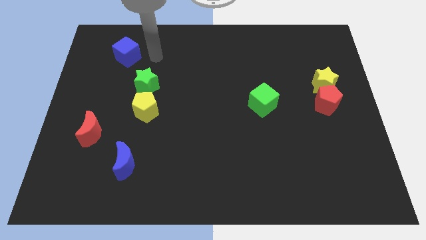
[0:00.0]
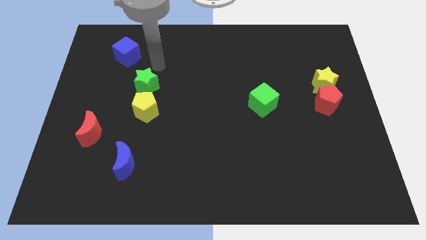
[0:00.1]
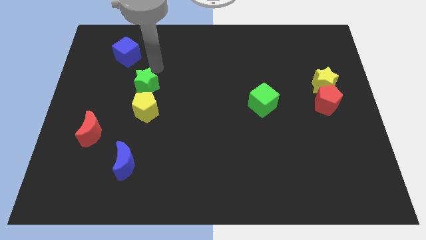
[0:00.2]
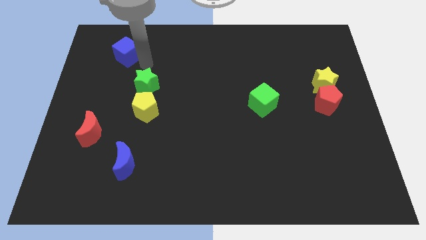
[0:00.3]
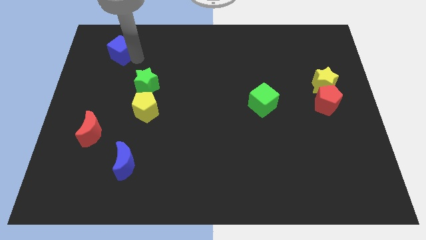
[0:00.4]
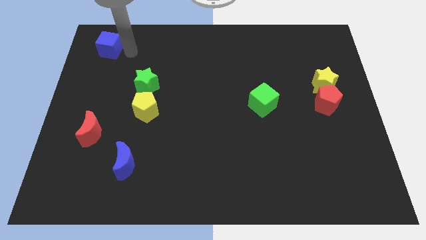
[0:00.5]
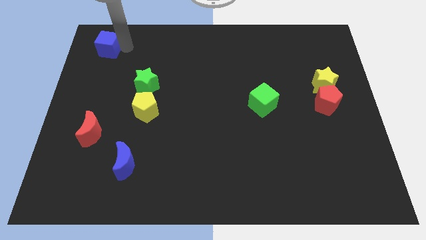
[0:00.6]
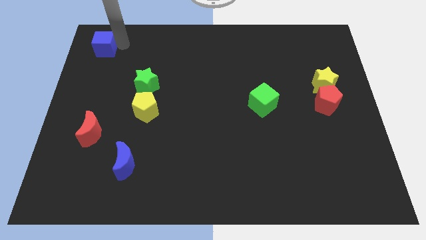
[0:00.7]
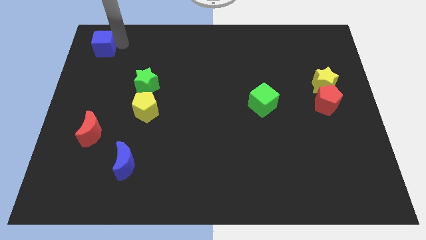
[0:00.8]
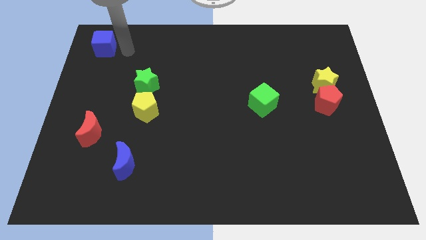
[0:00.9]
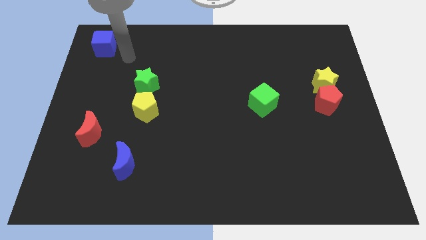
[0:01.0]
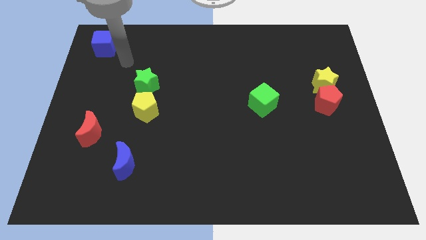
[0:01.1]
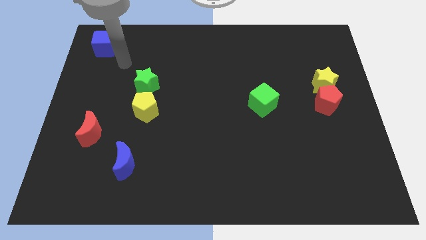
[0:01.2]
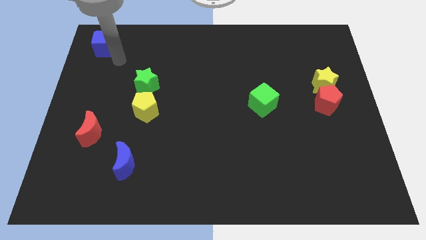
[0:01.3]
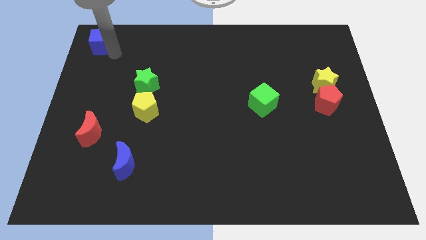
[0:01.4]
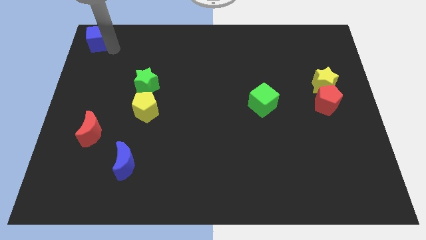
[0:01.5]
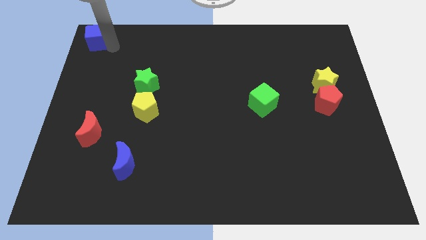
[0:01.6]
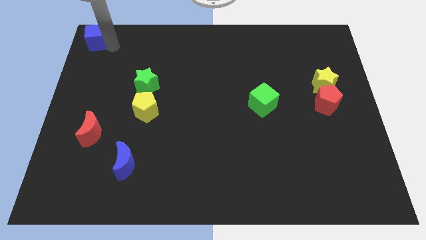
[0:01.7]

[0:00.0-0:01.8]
move the blue cube at the top left corner

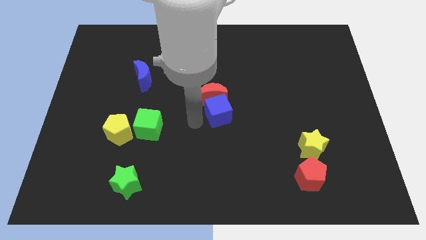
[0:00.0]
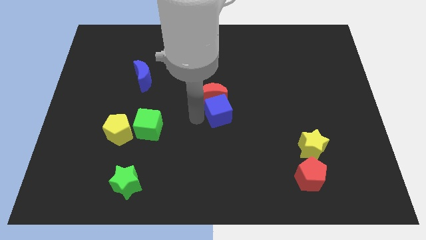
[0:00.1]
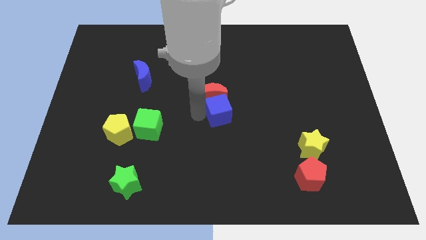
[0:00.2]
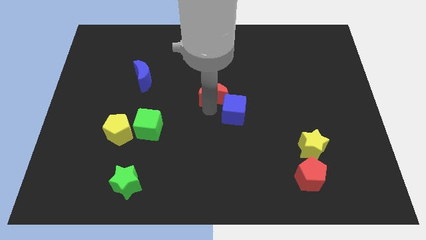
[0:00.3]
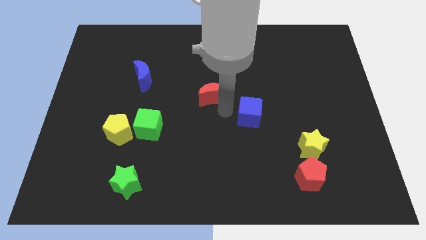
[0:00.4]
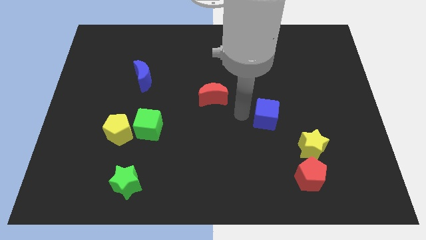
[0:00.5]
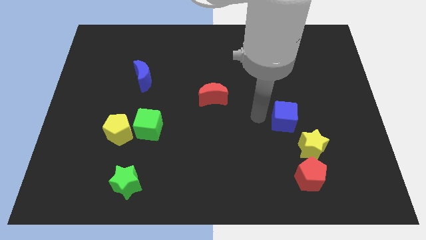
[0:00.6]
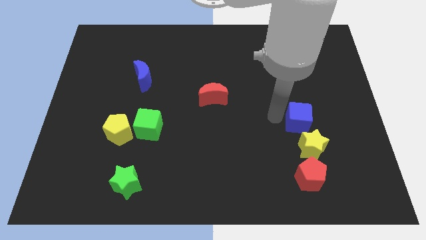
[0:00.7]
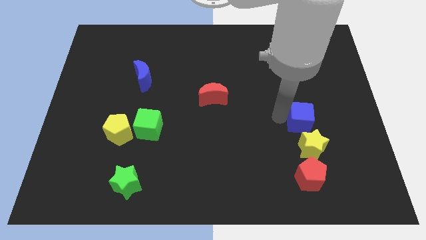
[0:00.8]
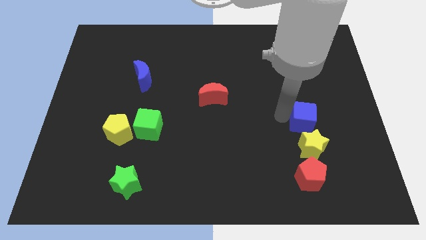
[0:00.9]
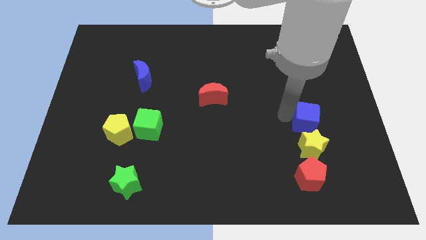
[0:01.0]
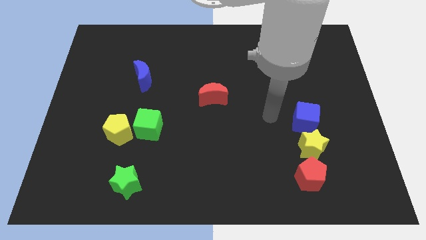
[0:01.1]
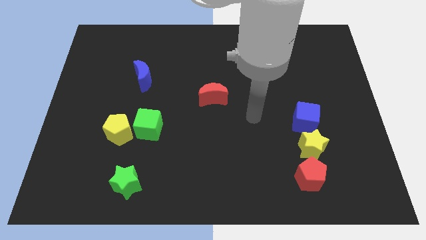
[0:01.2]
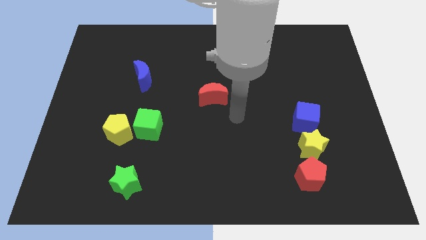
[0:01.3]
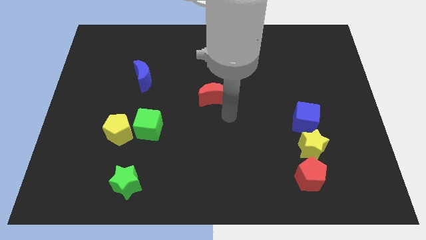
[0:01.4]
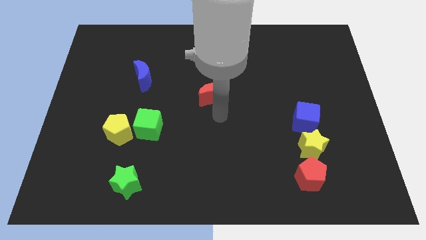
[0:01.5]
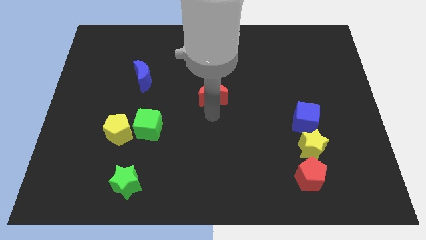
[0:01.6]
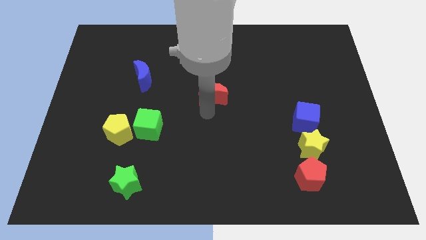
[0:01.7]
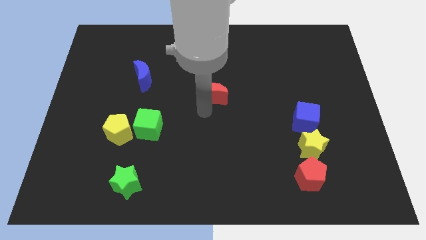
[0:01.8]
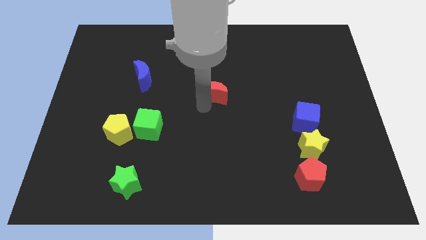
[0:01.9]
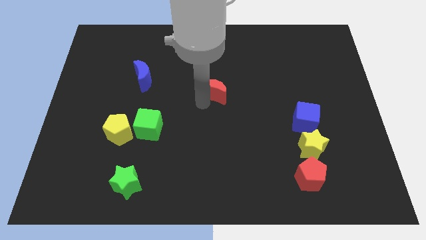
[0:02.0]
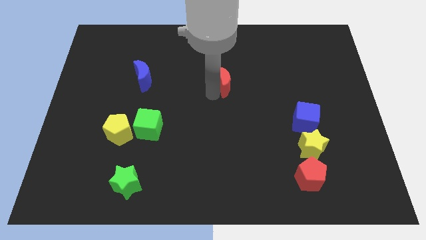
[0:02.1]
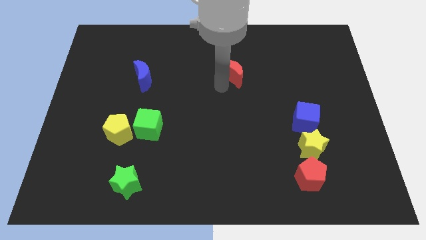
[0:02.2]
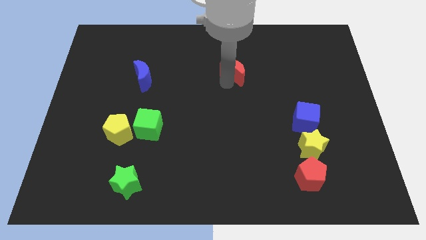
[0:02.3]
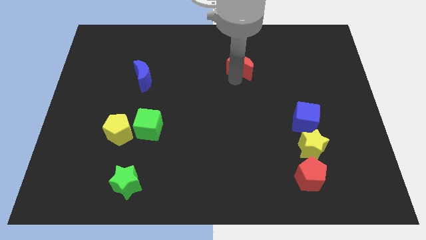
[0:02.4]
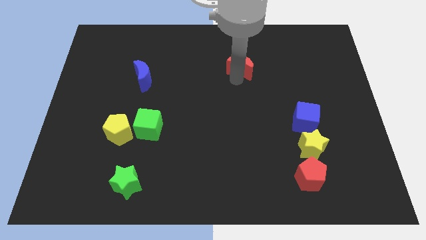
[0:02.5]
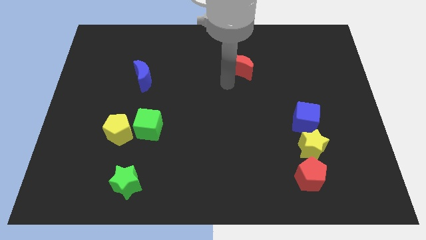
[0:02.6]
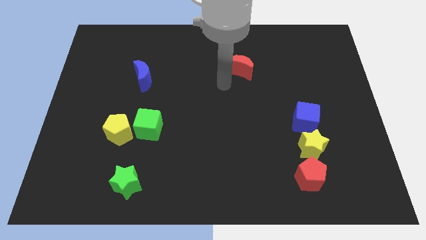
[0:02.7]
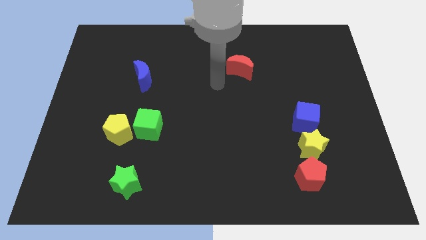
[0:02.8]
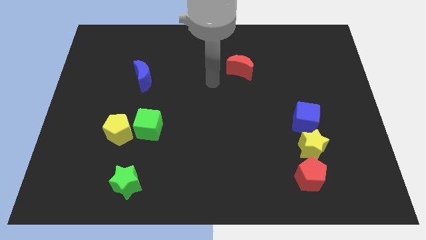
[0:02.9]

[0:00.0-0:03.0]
place the blue cube to top of the yellow star

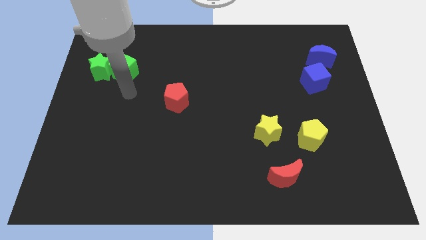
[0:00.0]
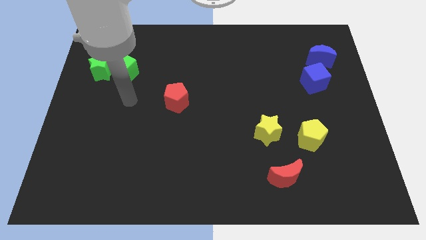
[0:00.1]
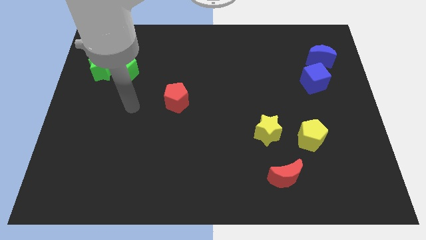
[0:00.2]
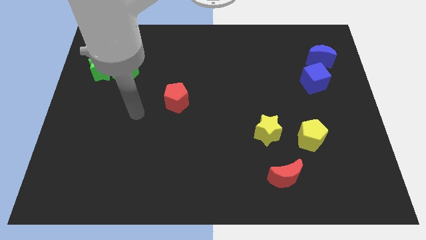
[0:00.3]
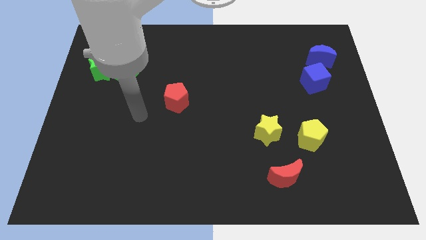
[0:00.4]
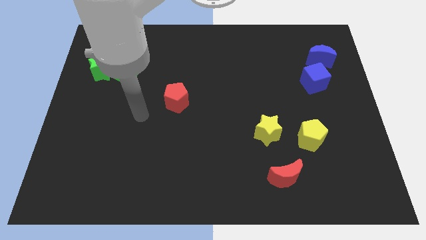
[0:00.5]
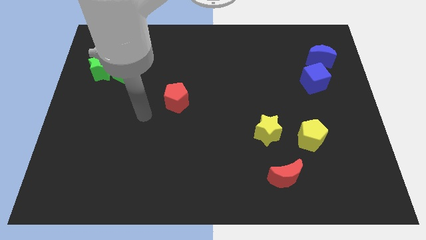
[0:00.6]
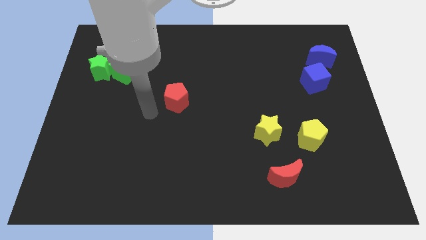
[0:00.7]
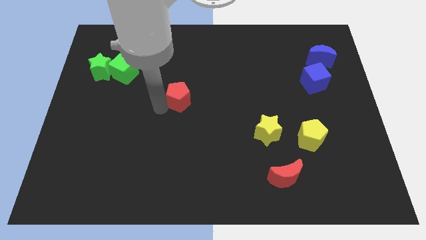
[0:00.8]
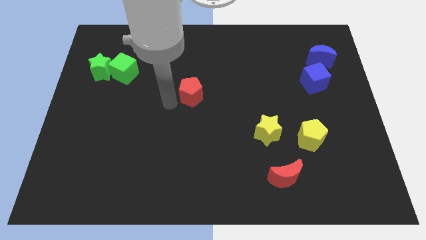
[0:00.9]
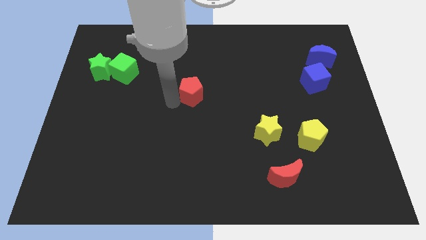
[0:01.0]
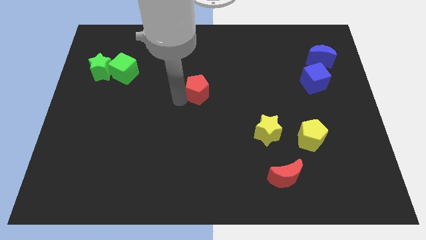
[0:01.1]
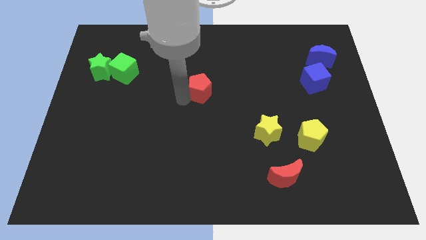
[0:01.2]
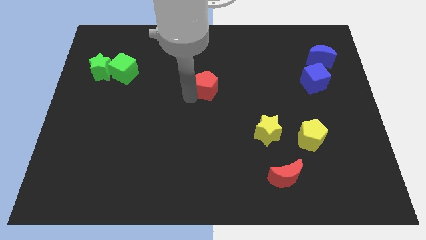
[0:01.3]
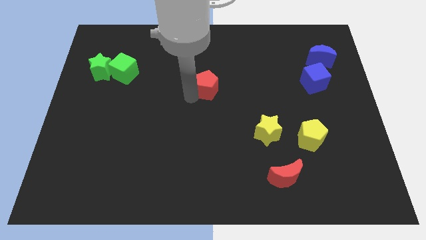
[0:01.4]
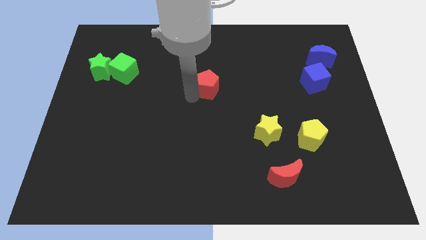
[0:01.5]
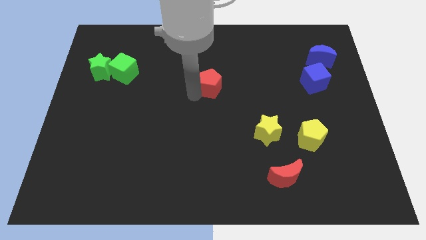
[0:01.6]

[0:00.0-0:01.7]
push the red pentagon to the center of the board

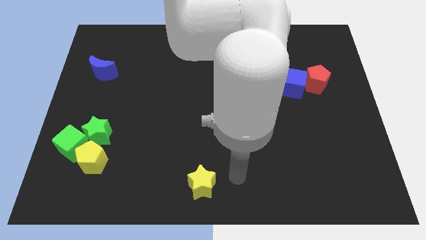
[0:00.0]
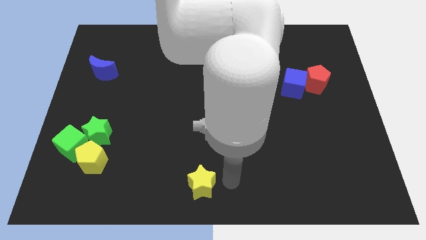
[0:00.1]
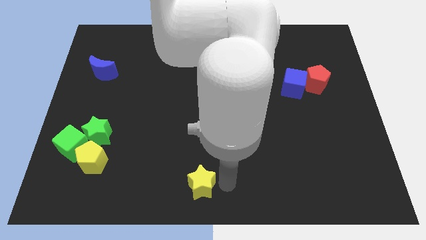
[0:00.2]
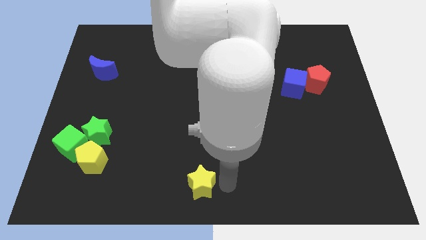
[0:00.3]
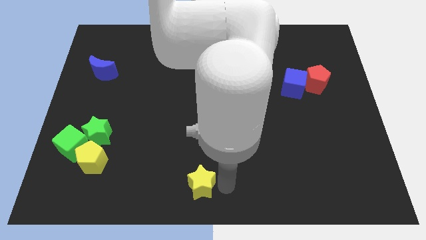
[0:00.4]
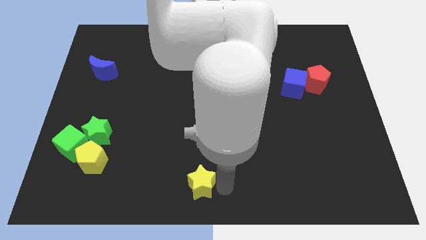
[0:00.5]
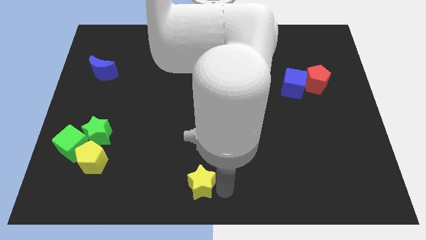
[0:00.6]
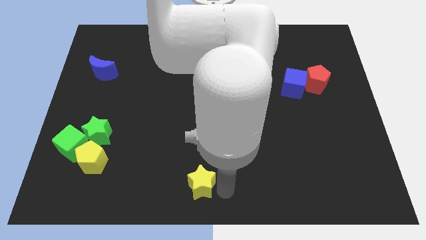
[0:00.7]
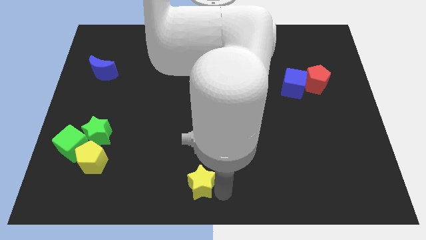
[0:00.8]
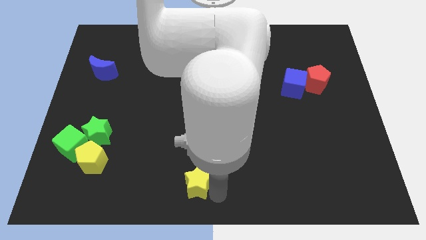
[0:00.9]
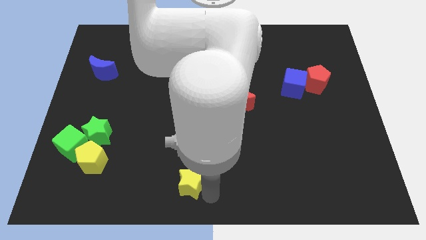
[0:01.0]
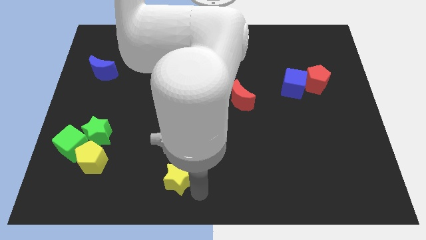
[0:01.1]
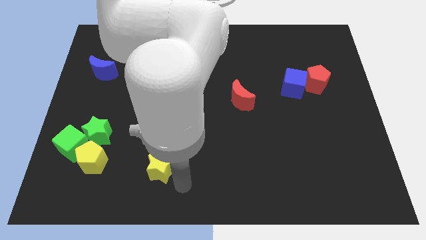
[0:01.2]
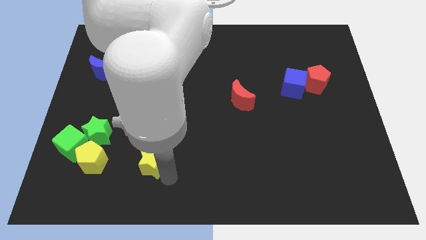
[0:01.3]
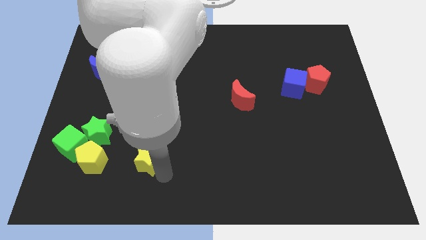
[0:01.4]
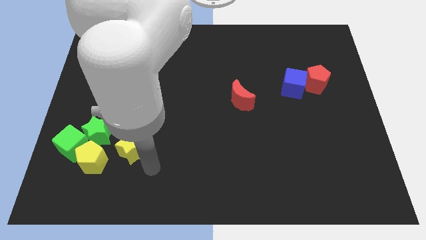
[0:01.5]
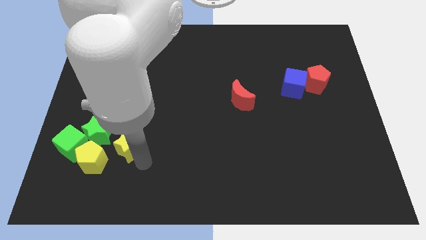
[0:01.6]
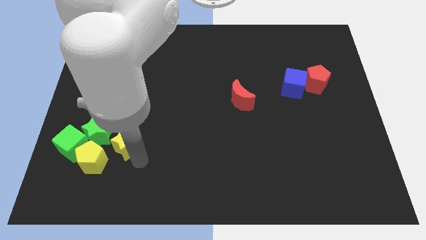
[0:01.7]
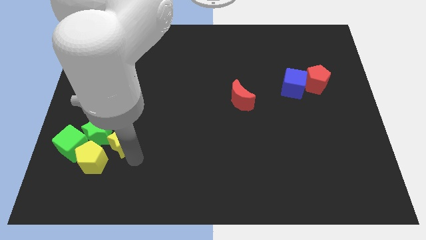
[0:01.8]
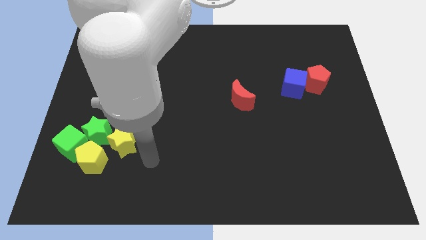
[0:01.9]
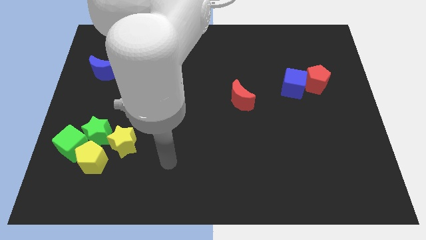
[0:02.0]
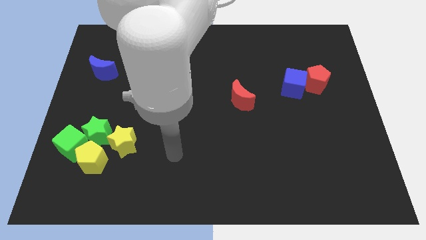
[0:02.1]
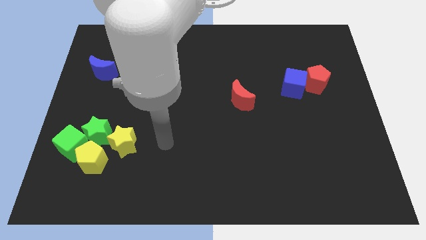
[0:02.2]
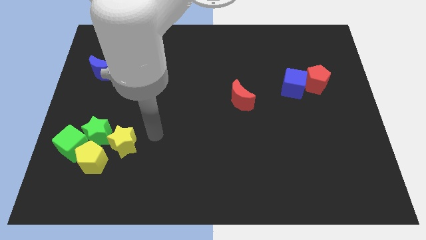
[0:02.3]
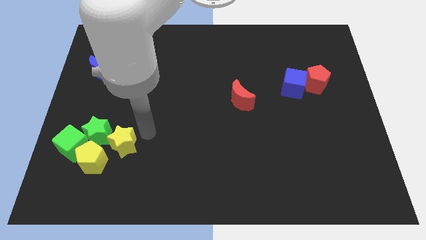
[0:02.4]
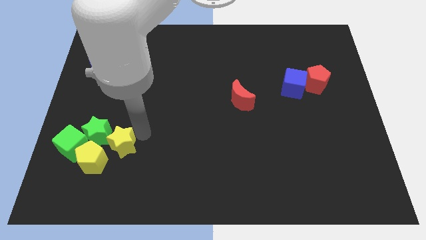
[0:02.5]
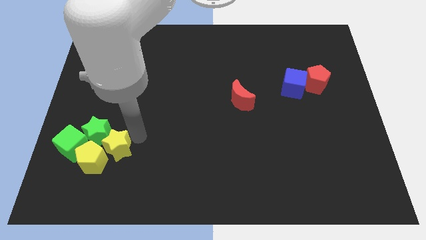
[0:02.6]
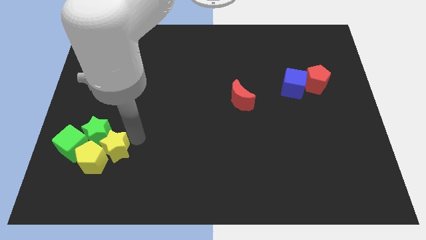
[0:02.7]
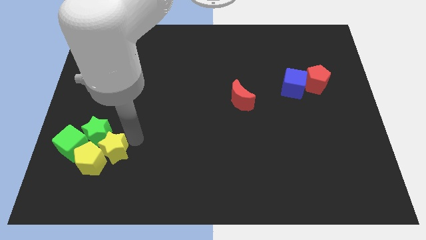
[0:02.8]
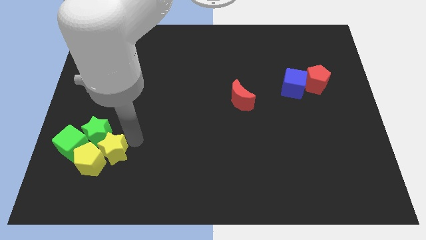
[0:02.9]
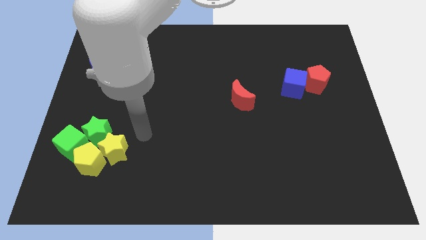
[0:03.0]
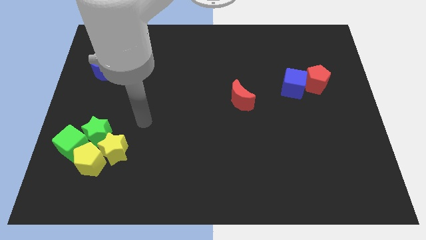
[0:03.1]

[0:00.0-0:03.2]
push the yellow star to the top right of the yellow pentagon on the board
